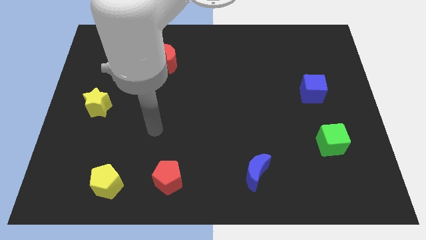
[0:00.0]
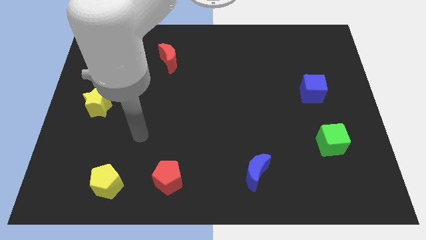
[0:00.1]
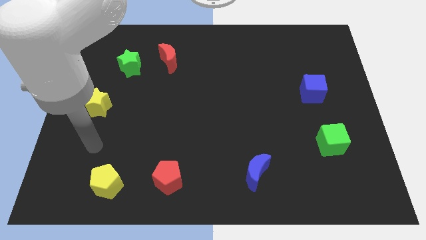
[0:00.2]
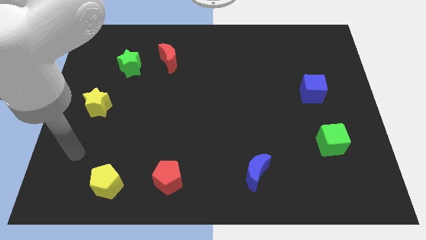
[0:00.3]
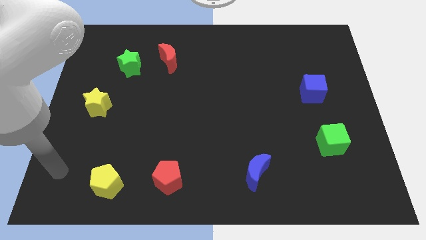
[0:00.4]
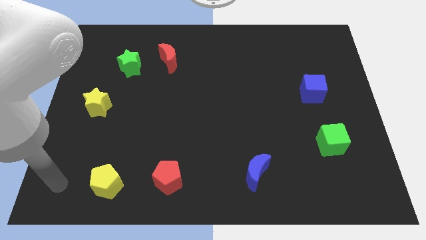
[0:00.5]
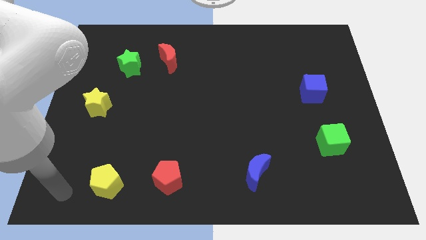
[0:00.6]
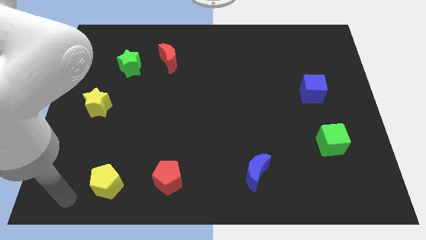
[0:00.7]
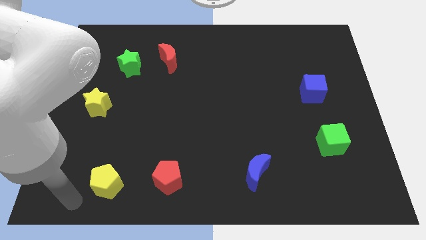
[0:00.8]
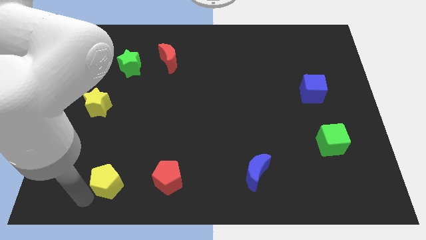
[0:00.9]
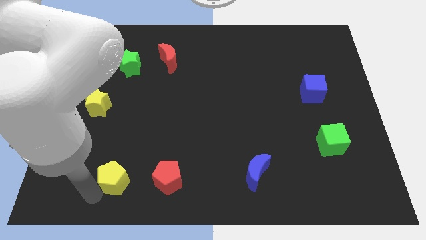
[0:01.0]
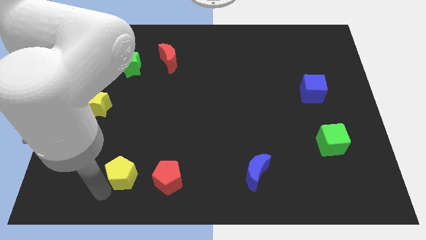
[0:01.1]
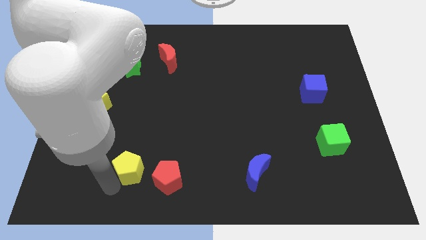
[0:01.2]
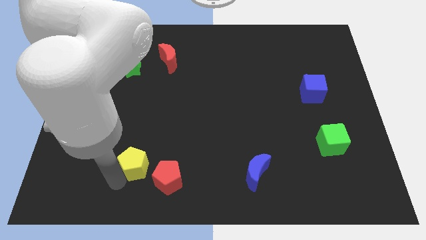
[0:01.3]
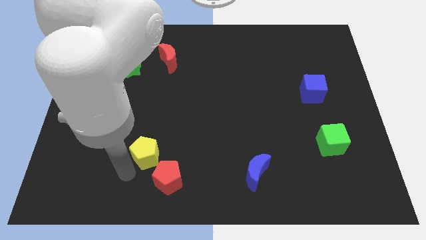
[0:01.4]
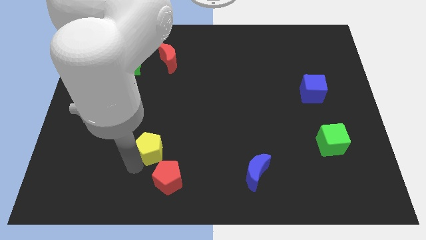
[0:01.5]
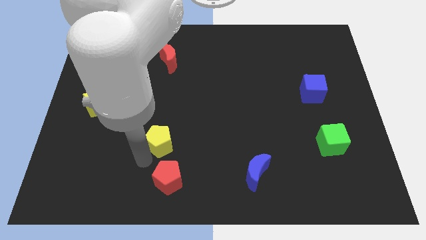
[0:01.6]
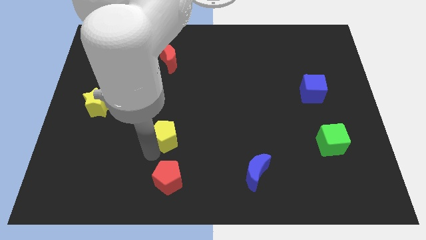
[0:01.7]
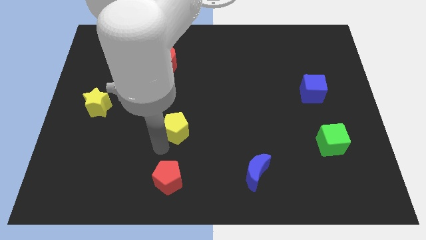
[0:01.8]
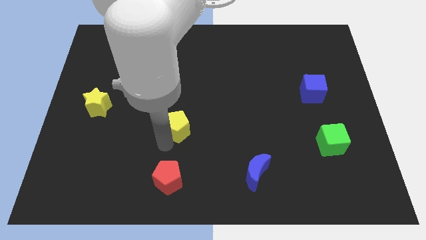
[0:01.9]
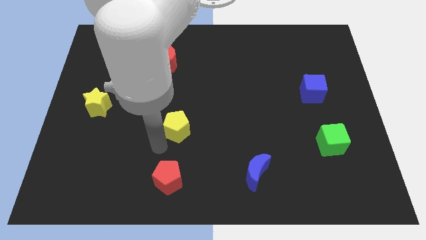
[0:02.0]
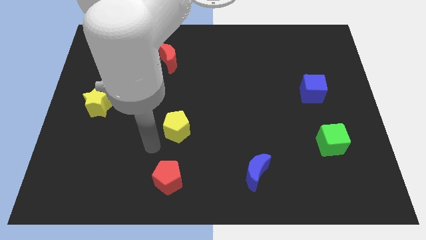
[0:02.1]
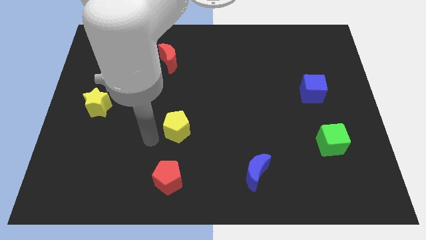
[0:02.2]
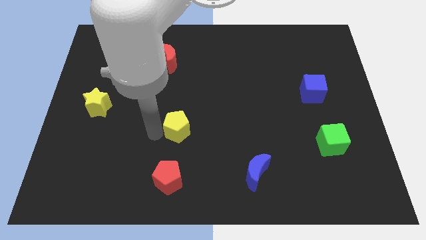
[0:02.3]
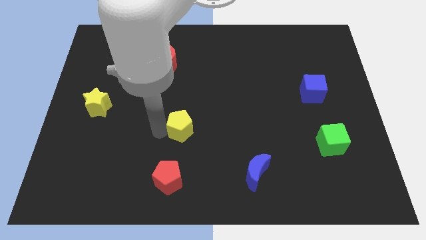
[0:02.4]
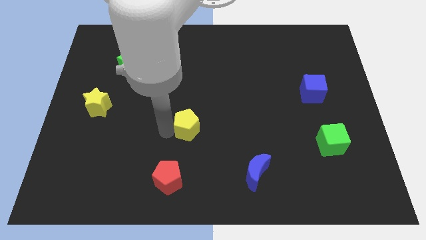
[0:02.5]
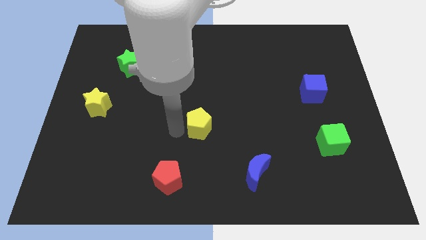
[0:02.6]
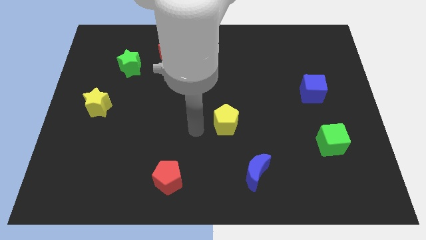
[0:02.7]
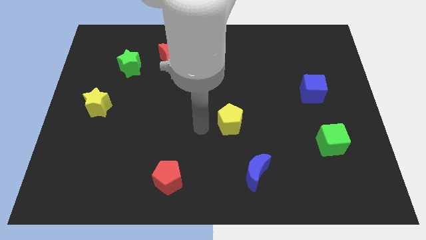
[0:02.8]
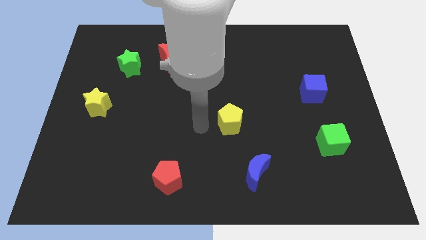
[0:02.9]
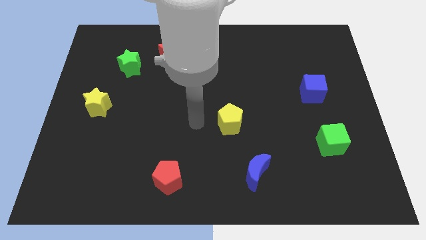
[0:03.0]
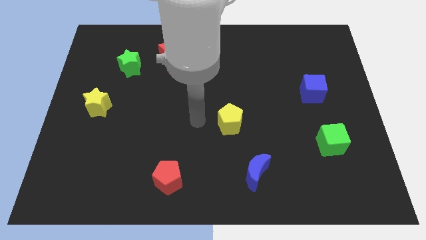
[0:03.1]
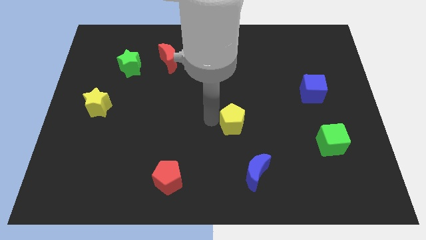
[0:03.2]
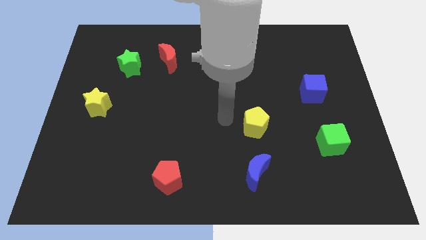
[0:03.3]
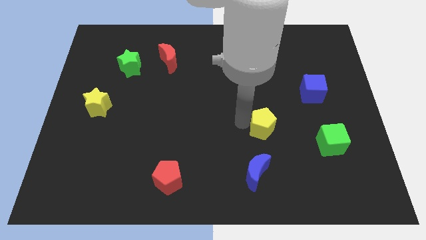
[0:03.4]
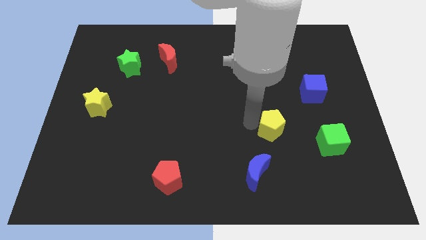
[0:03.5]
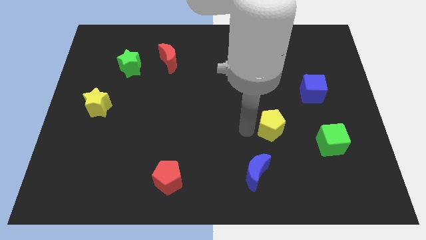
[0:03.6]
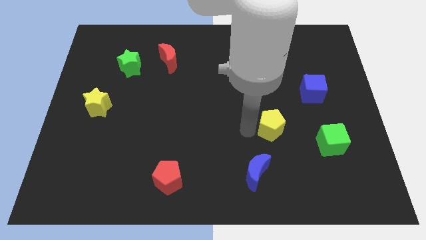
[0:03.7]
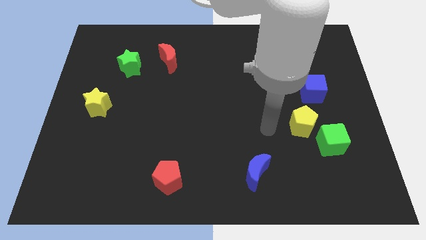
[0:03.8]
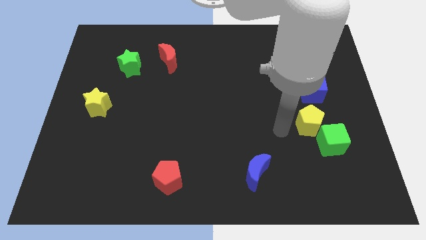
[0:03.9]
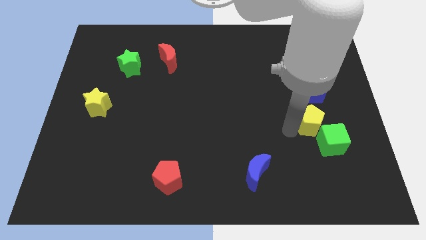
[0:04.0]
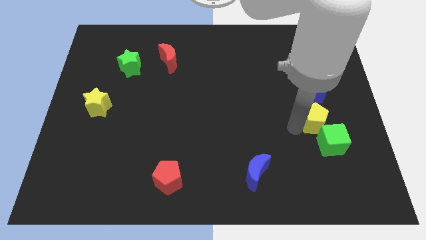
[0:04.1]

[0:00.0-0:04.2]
push the yellow pentagon to the green cube

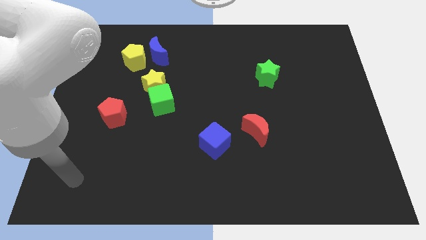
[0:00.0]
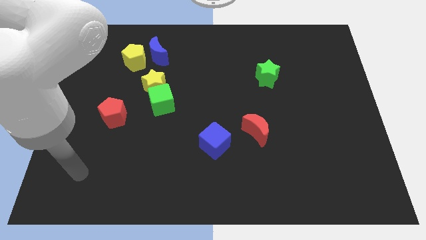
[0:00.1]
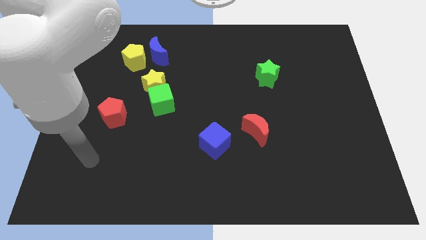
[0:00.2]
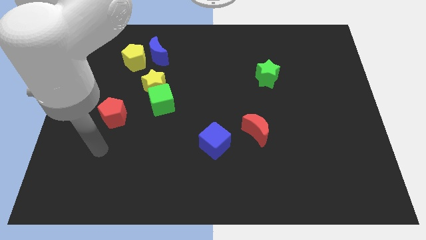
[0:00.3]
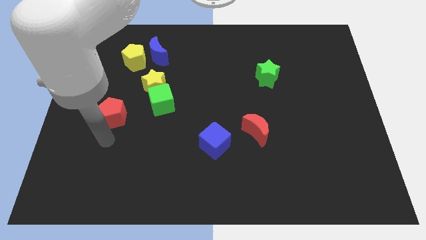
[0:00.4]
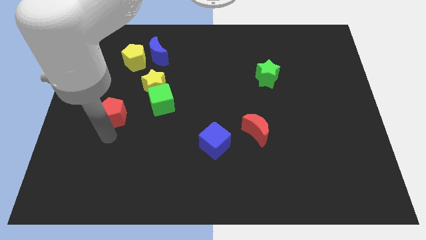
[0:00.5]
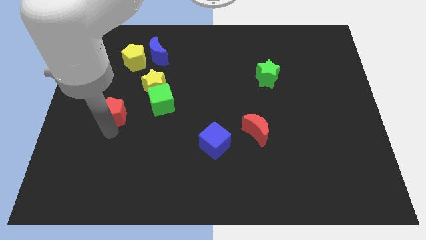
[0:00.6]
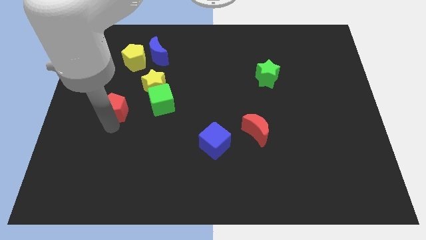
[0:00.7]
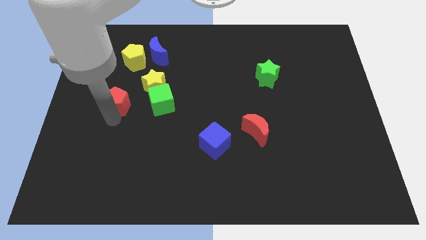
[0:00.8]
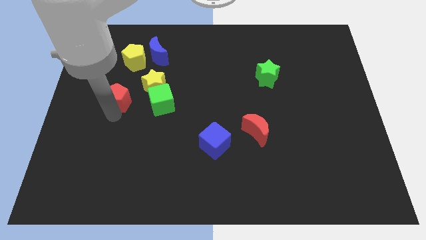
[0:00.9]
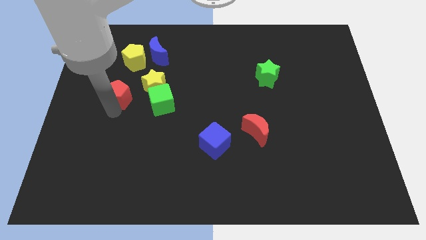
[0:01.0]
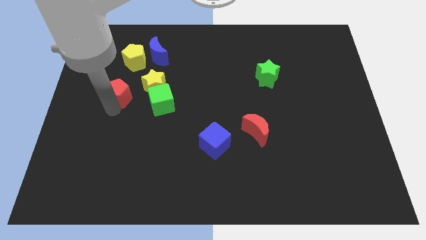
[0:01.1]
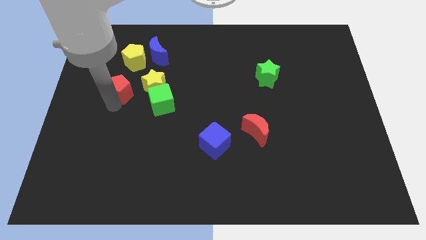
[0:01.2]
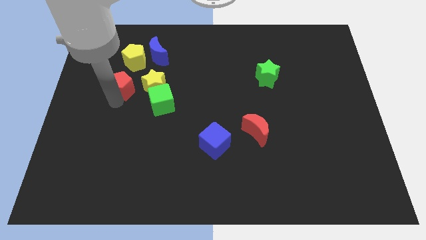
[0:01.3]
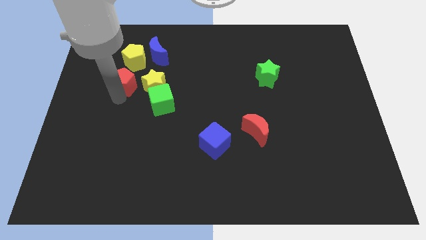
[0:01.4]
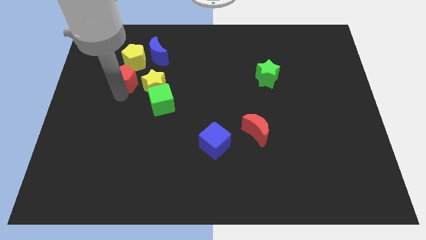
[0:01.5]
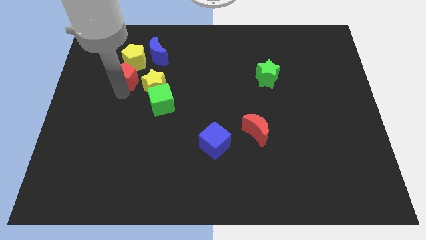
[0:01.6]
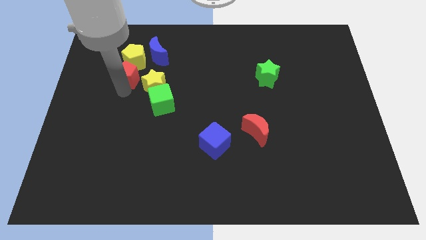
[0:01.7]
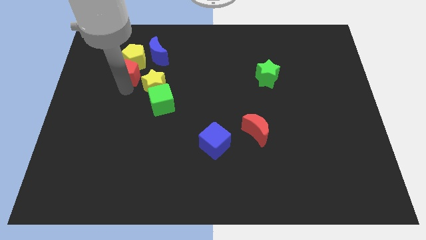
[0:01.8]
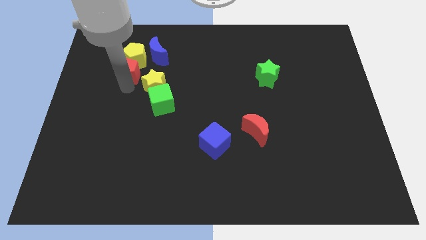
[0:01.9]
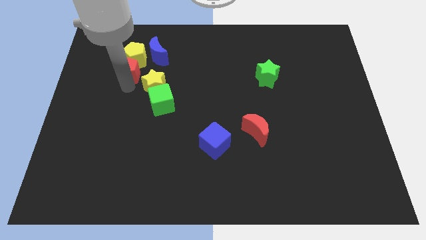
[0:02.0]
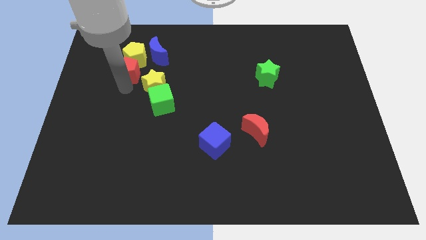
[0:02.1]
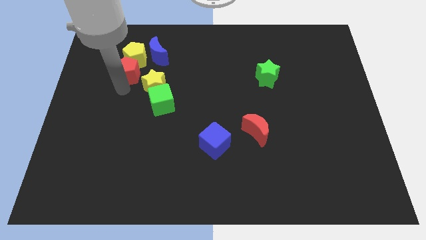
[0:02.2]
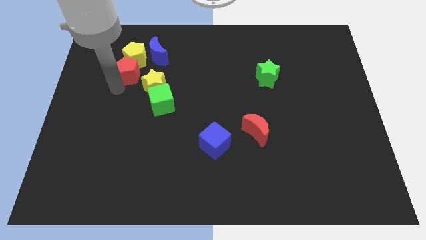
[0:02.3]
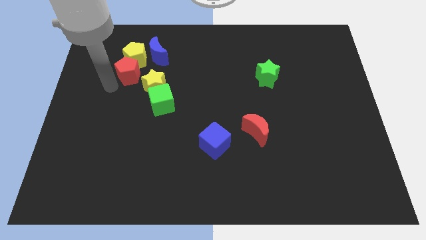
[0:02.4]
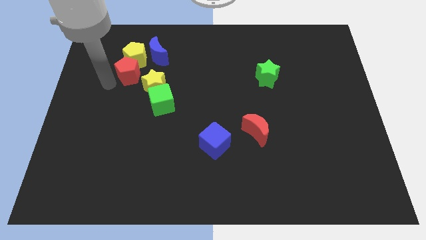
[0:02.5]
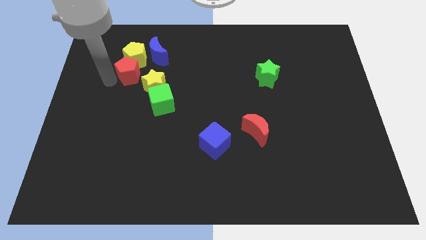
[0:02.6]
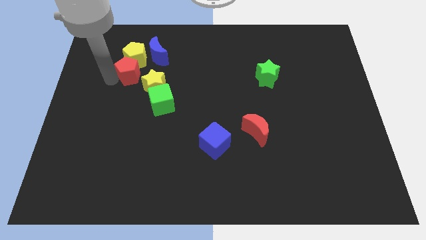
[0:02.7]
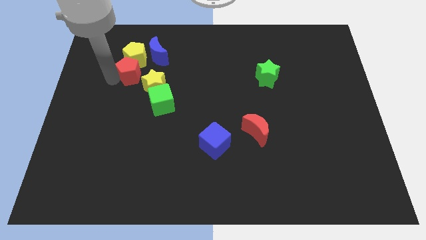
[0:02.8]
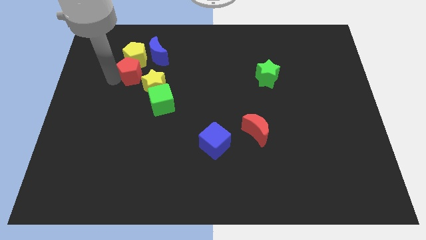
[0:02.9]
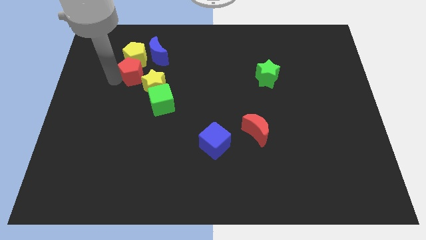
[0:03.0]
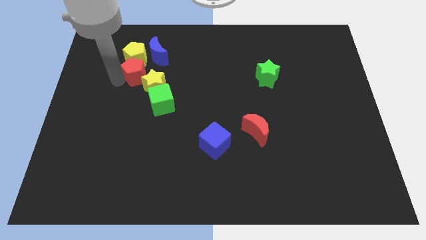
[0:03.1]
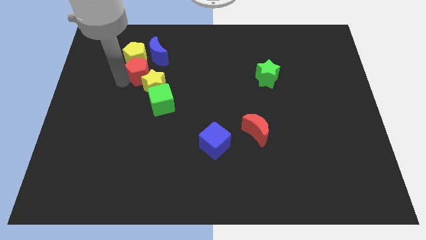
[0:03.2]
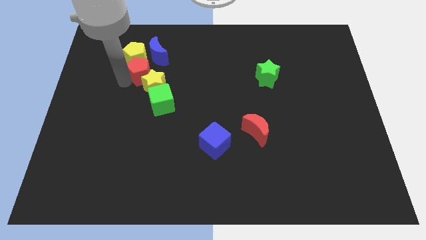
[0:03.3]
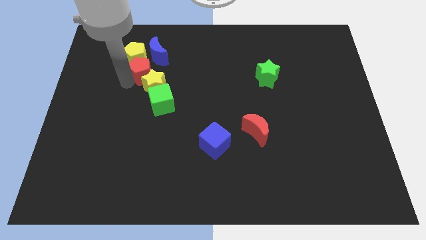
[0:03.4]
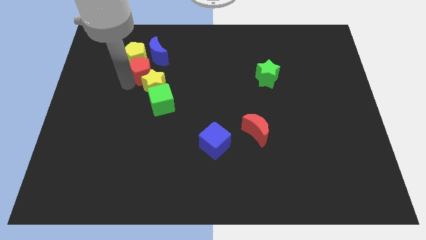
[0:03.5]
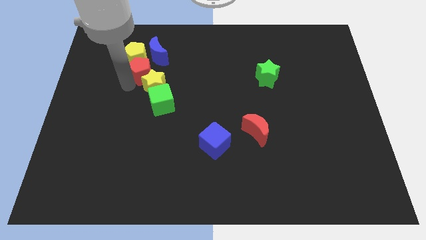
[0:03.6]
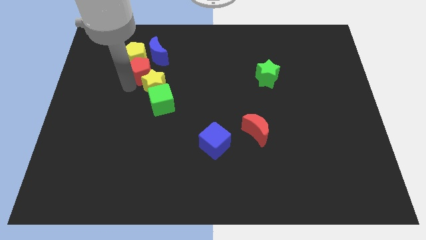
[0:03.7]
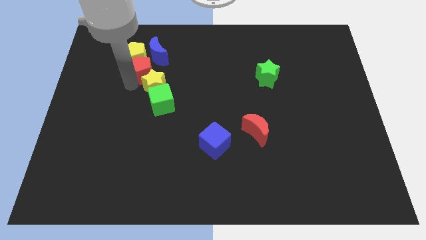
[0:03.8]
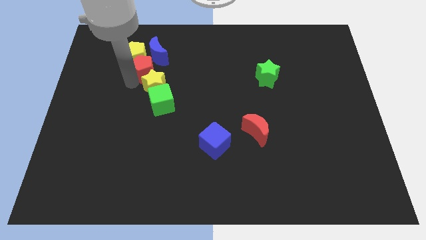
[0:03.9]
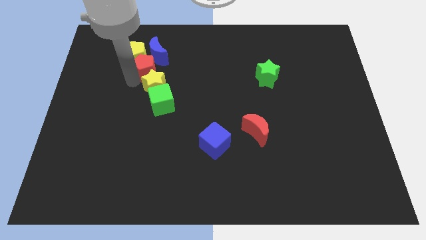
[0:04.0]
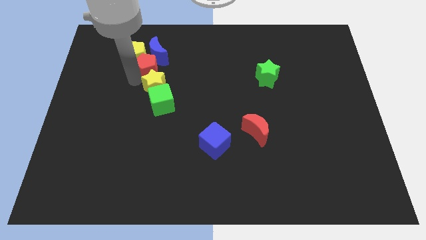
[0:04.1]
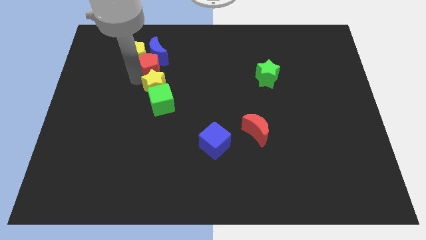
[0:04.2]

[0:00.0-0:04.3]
slide the red pentagon close to the blue moon
